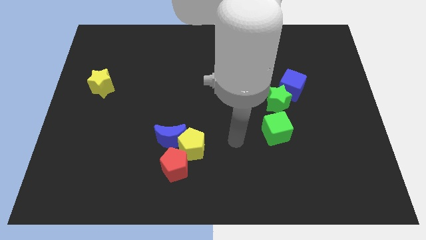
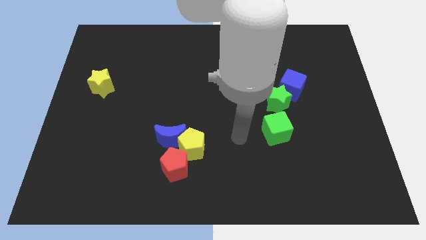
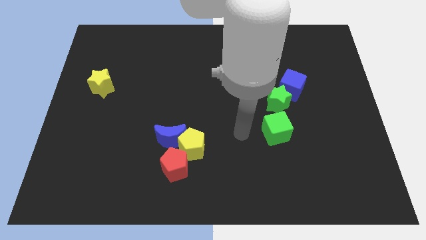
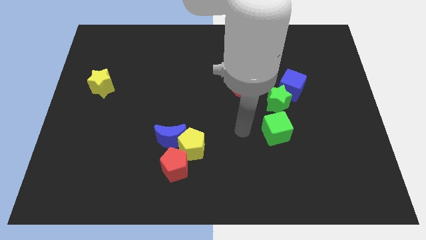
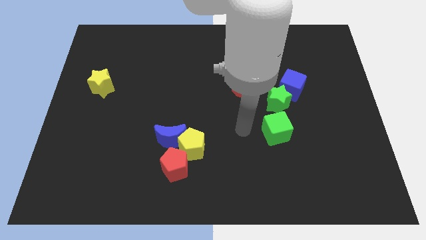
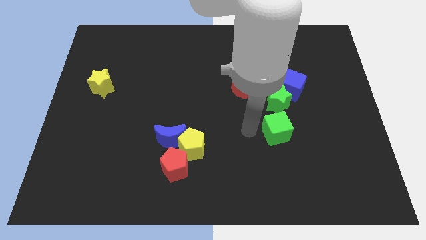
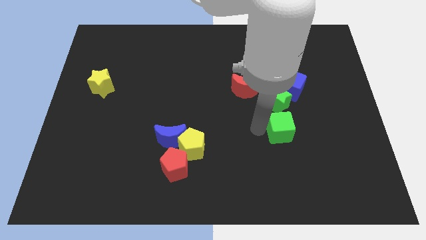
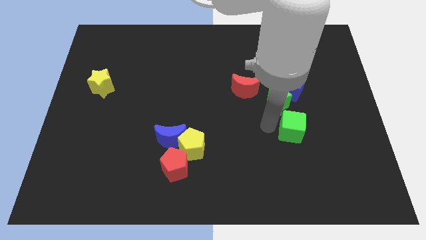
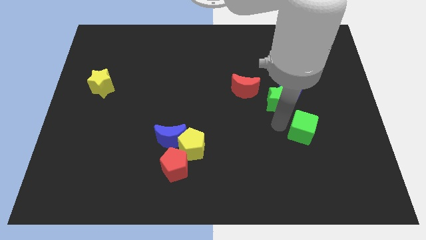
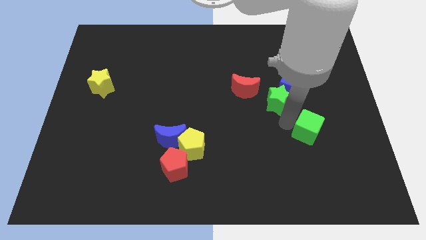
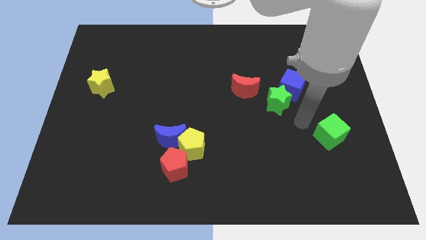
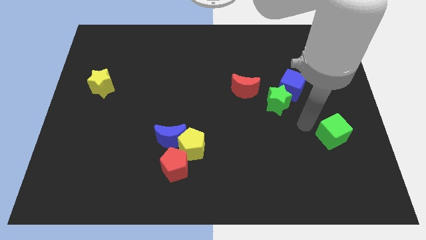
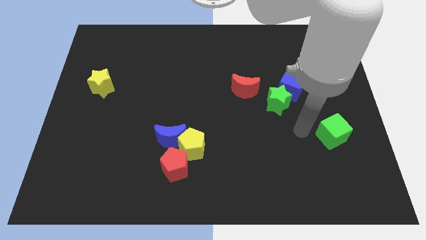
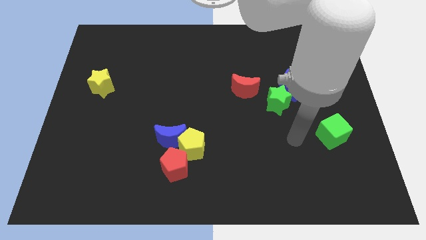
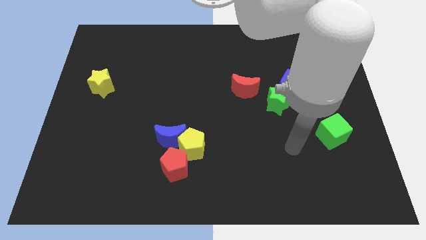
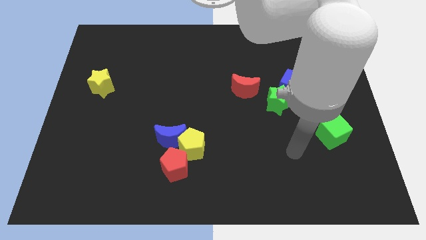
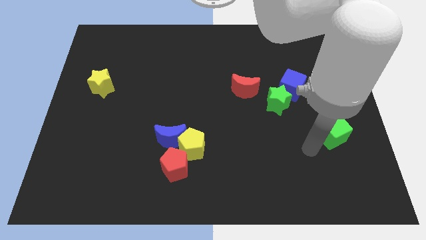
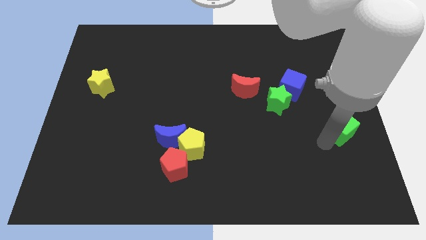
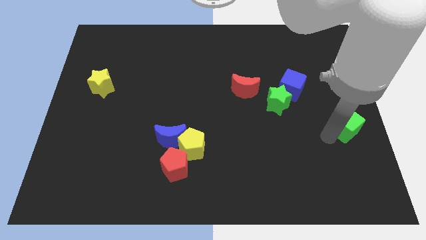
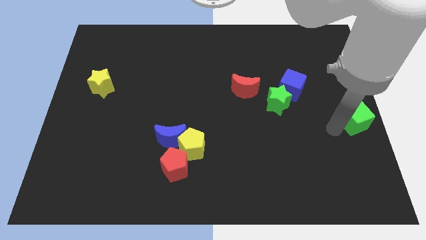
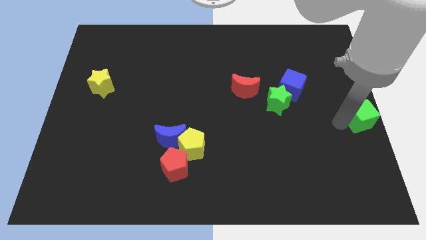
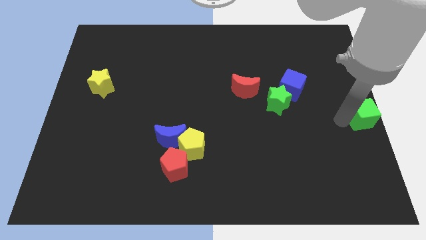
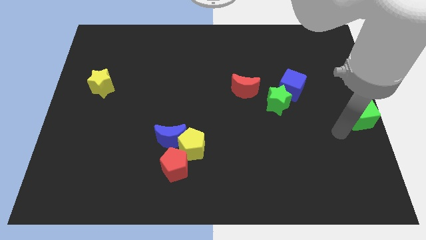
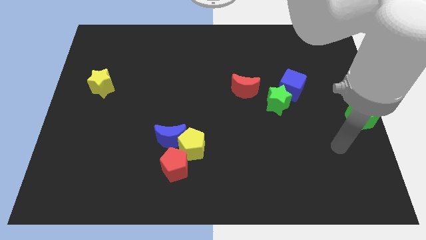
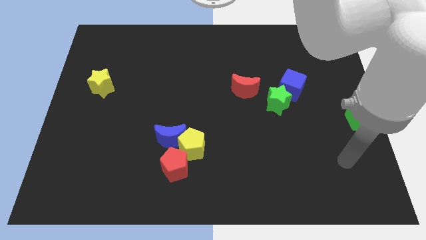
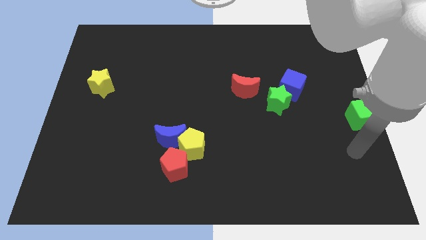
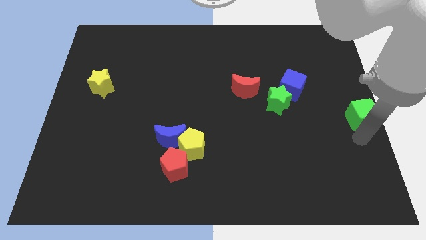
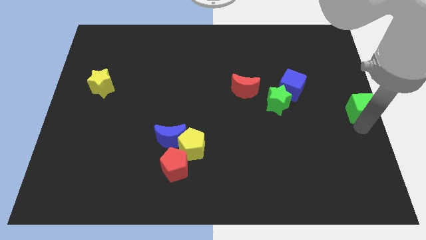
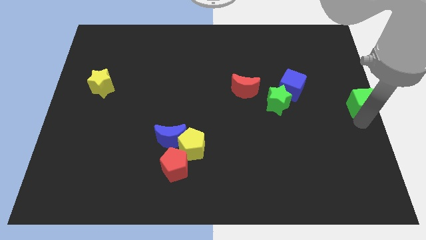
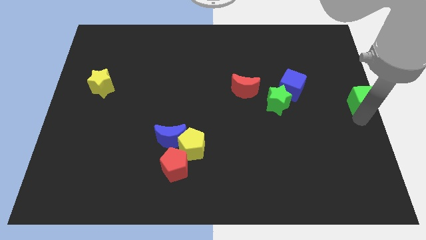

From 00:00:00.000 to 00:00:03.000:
place the green cube right to the green star

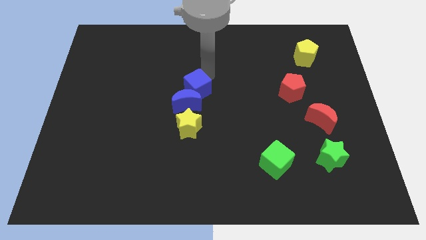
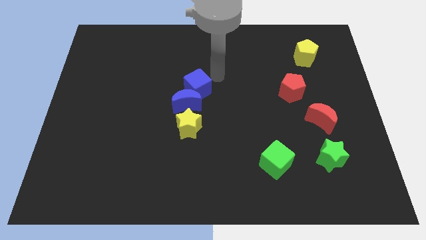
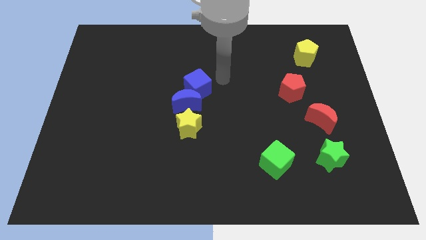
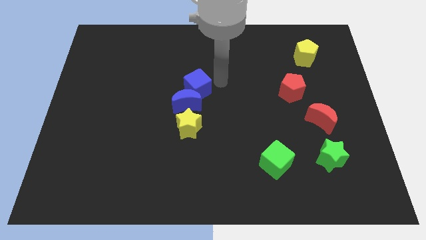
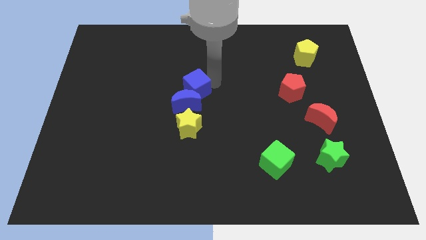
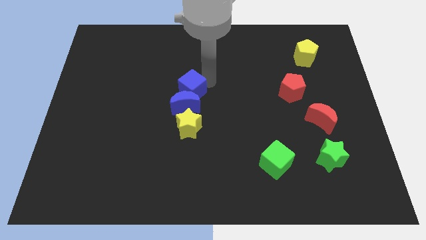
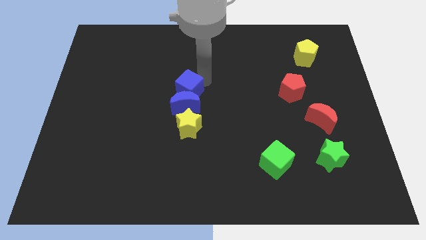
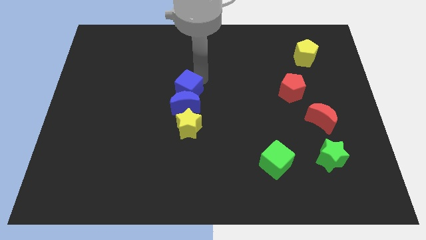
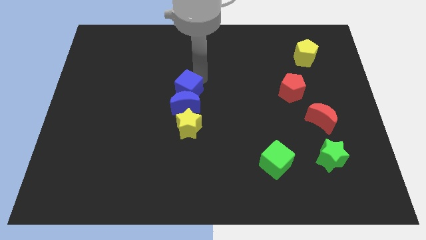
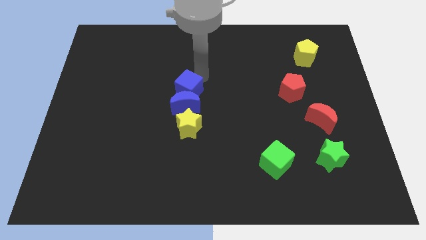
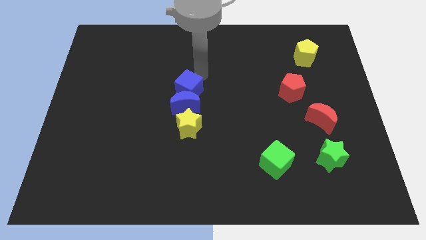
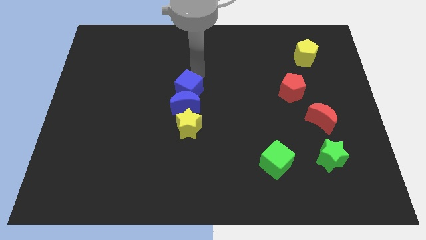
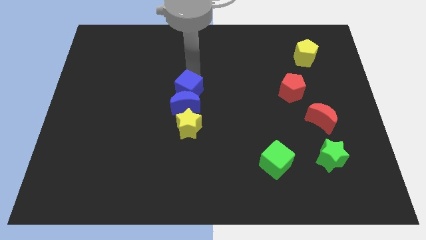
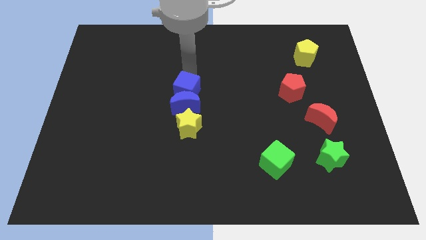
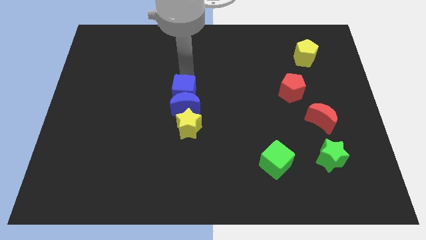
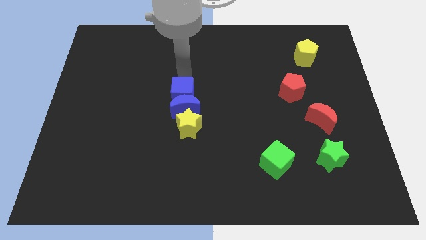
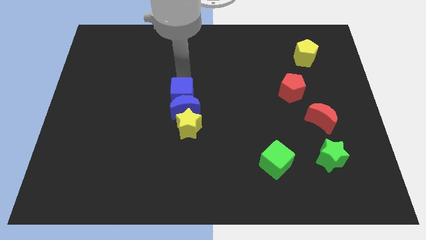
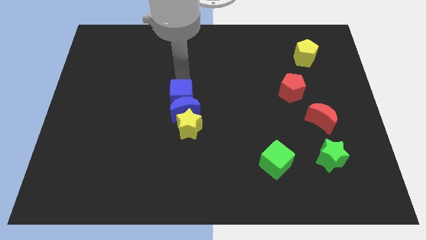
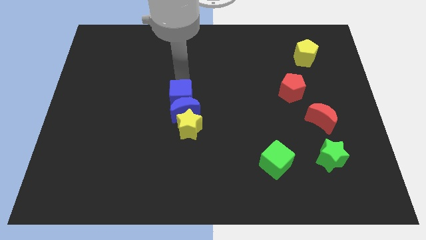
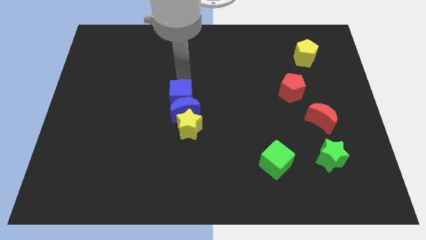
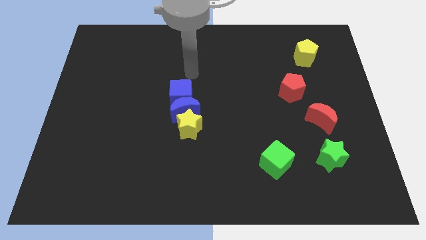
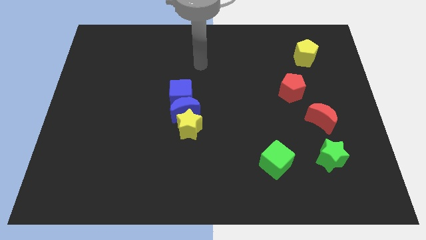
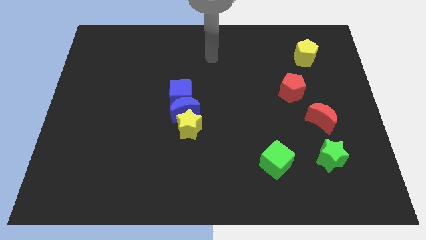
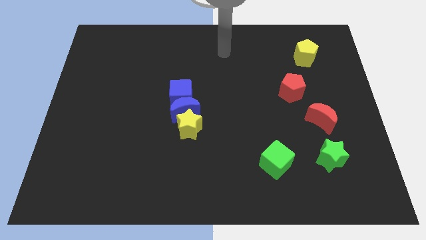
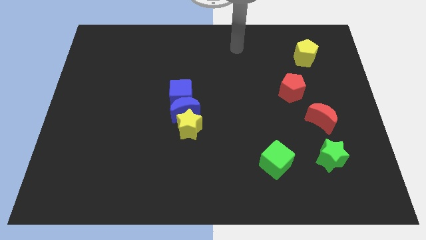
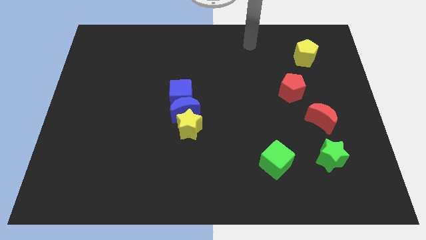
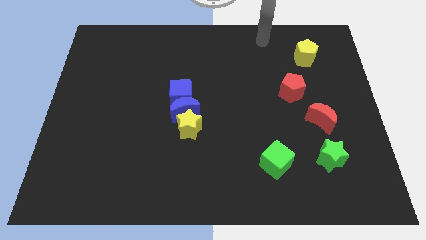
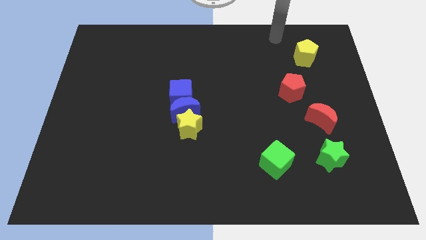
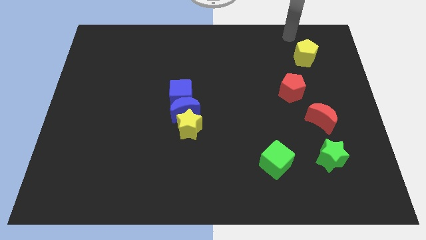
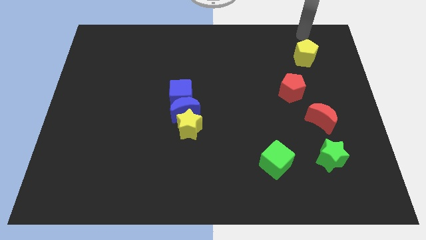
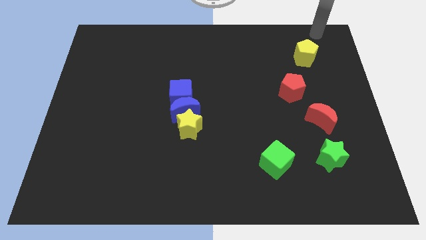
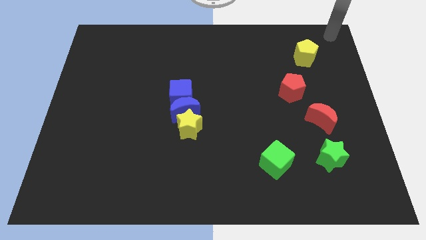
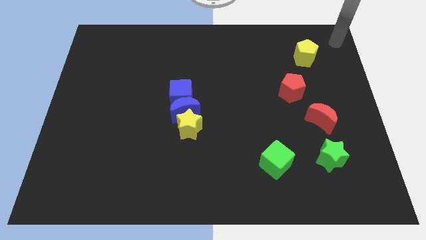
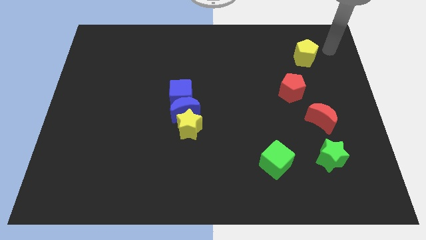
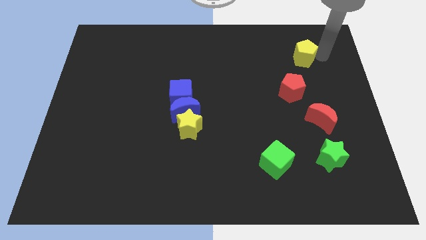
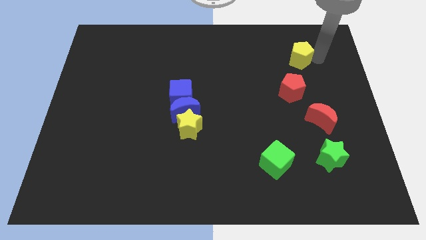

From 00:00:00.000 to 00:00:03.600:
slide the blue cube above the blue moon

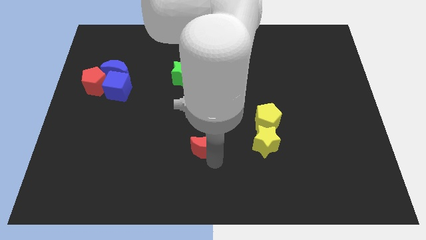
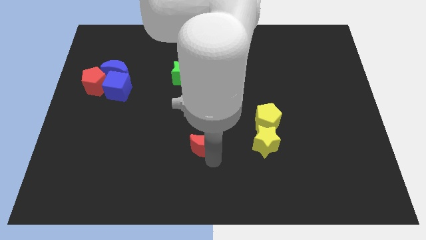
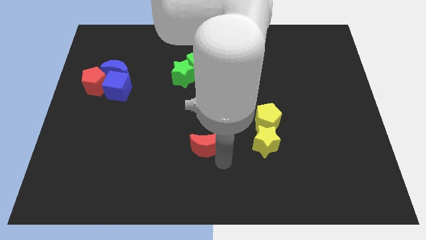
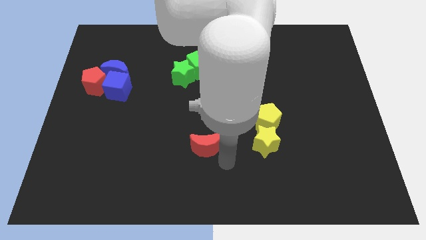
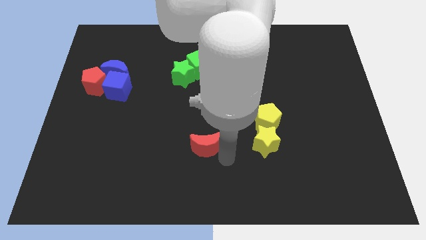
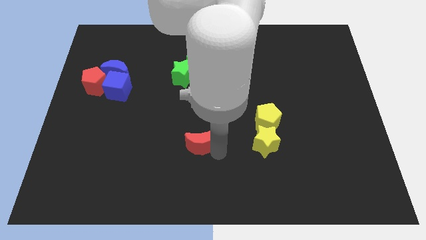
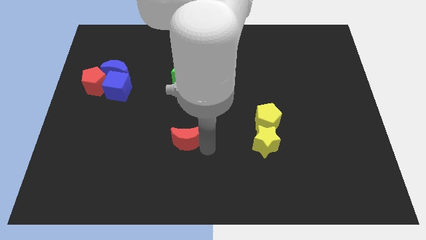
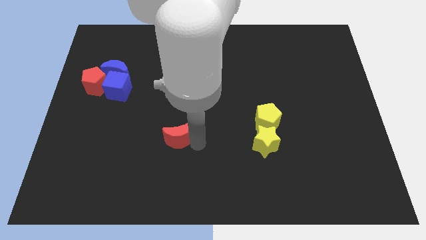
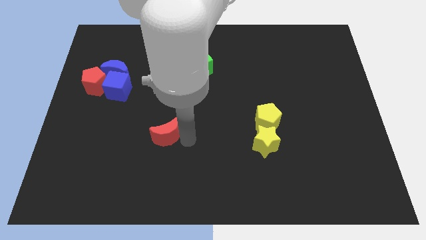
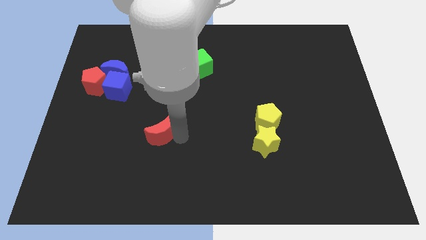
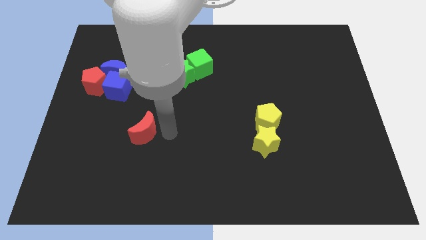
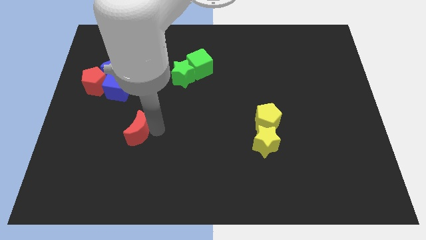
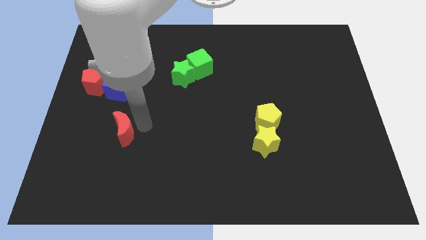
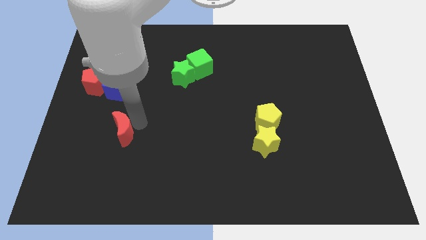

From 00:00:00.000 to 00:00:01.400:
put the red moon vertically below the blue cube

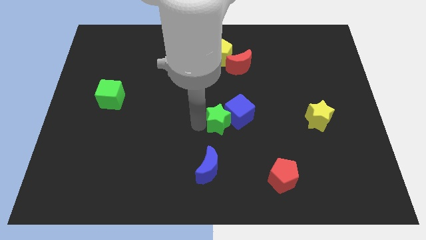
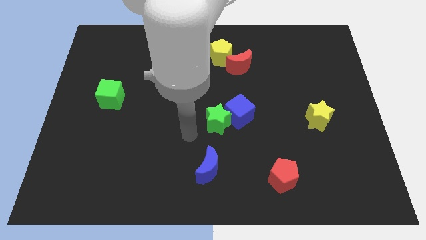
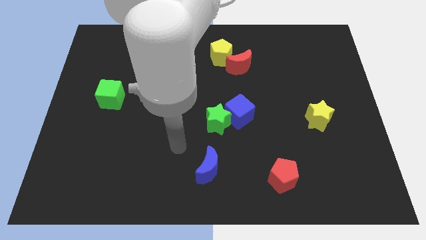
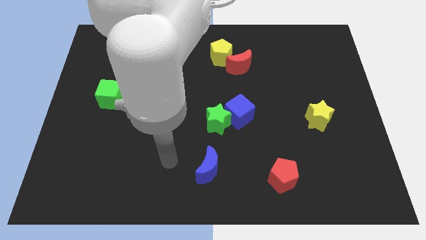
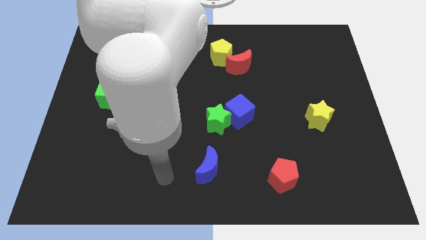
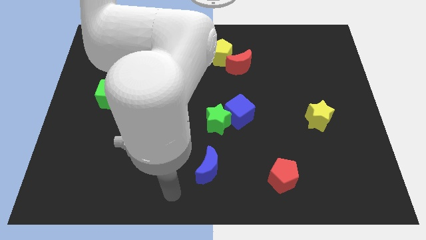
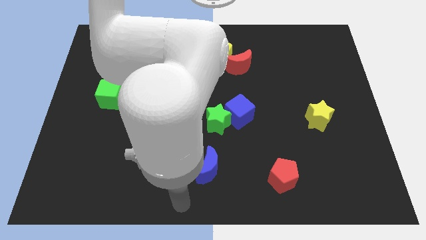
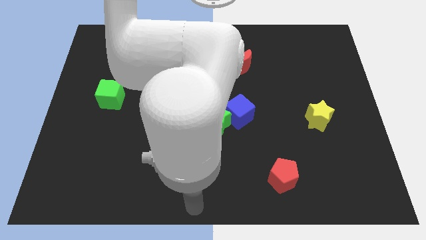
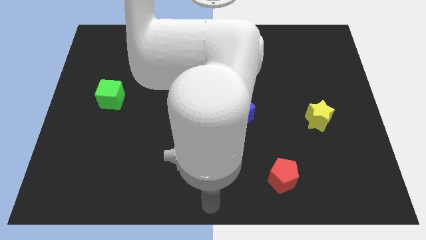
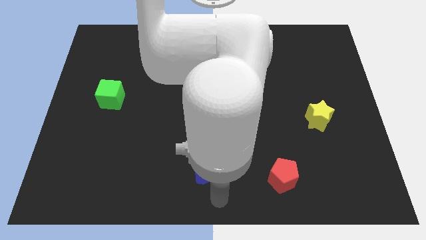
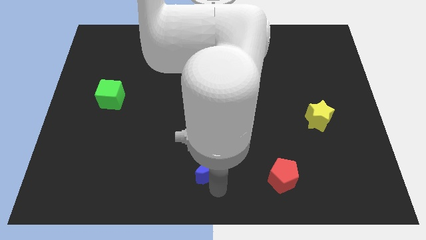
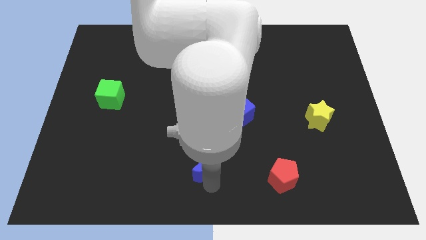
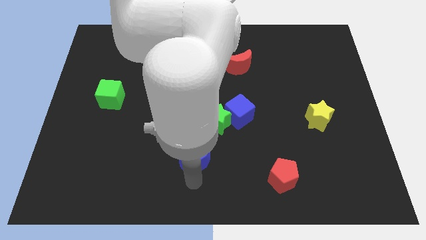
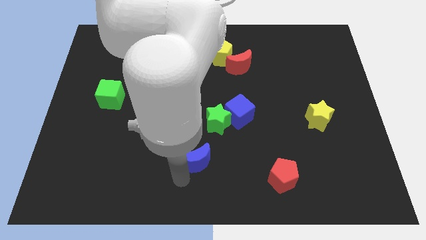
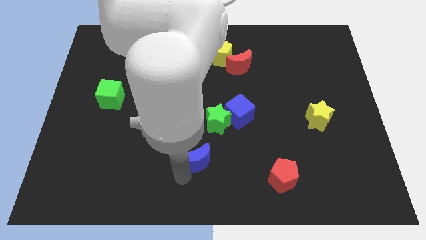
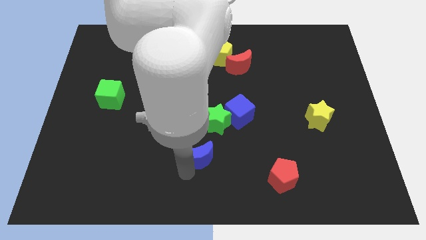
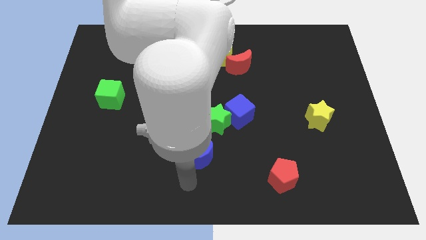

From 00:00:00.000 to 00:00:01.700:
slide the blue moon diagonally on the bottom left side of the green star
